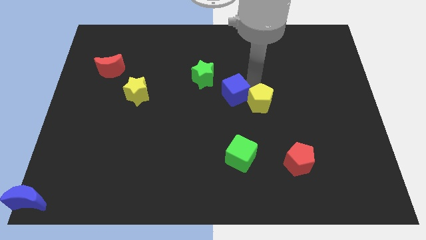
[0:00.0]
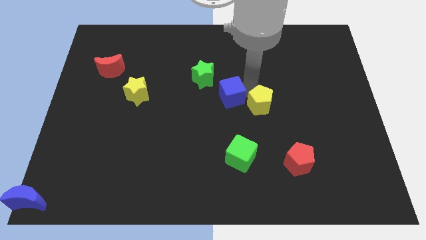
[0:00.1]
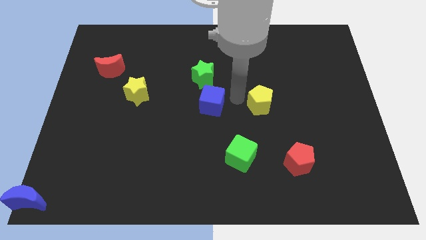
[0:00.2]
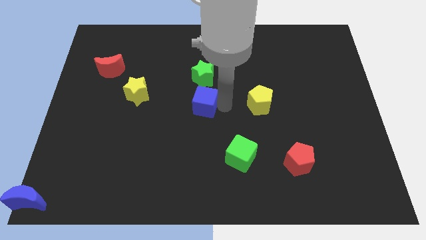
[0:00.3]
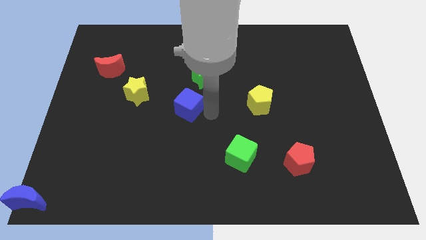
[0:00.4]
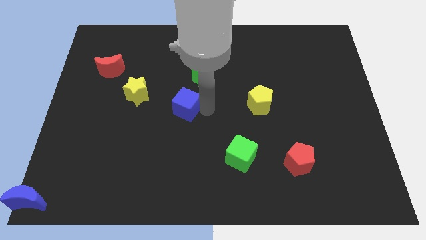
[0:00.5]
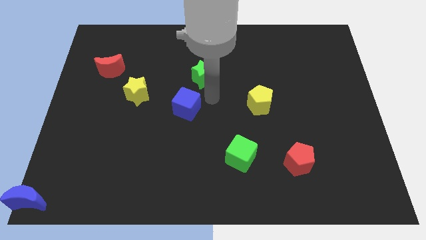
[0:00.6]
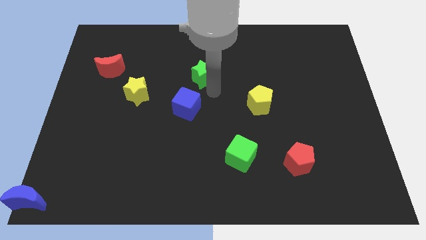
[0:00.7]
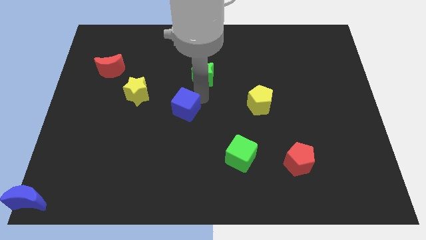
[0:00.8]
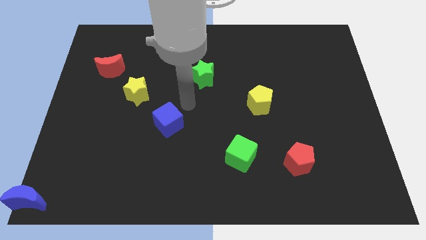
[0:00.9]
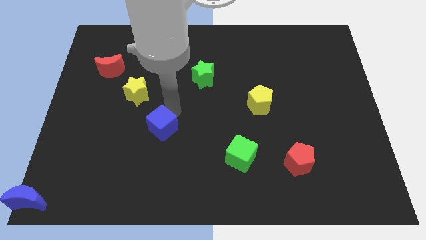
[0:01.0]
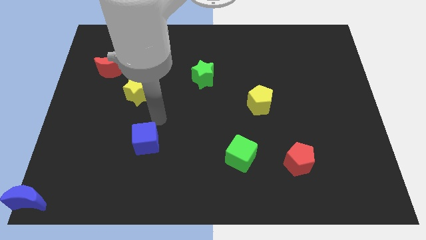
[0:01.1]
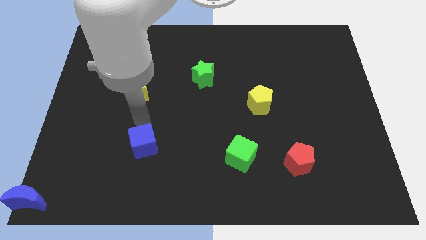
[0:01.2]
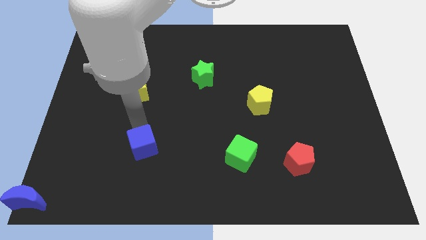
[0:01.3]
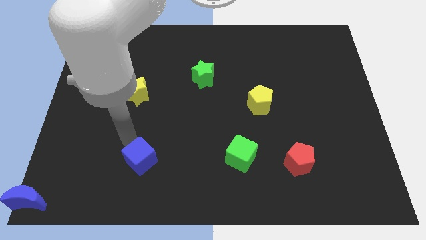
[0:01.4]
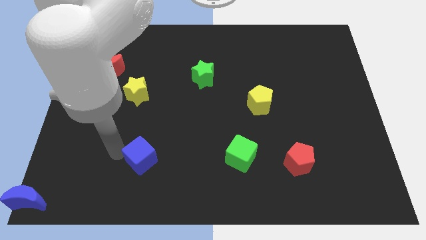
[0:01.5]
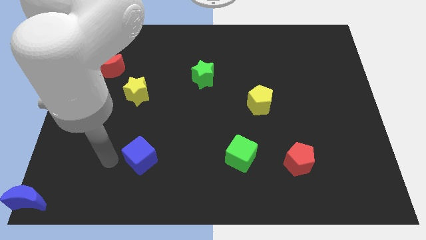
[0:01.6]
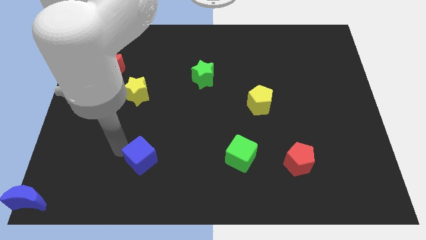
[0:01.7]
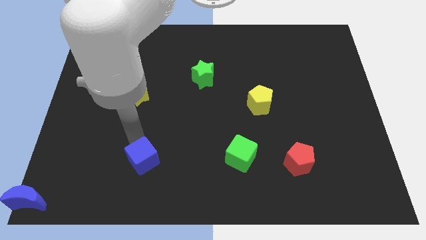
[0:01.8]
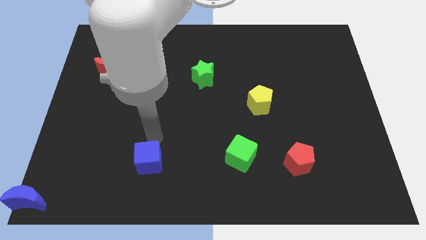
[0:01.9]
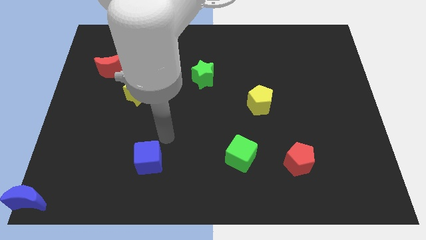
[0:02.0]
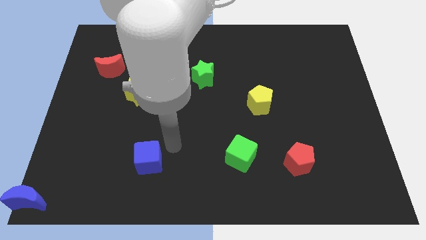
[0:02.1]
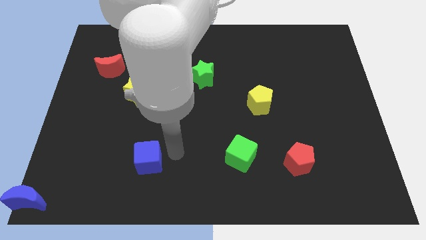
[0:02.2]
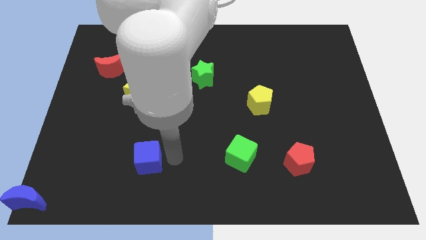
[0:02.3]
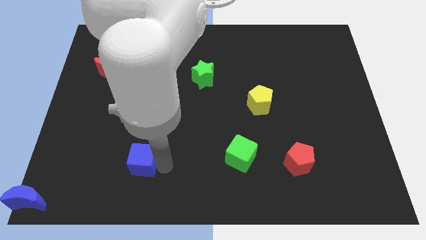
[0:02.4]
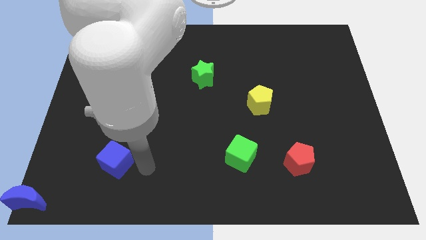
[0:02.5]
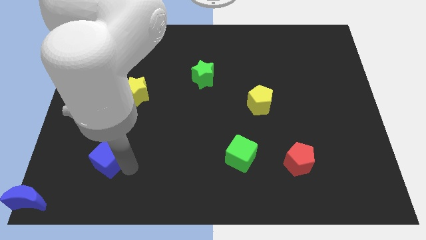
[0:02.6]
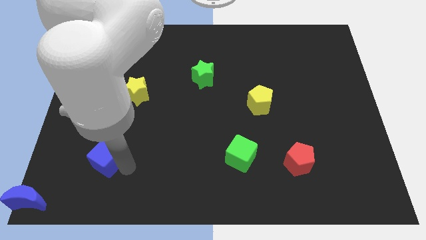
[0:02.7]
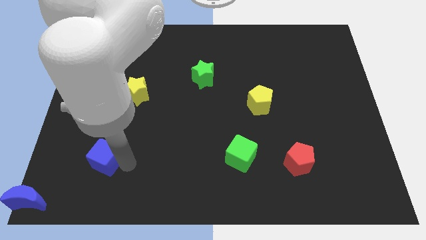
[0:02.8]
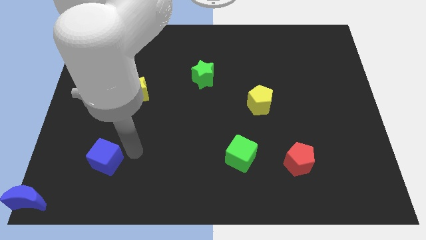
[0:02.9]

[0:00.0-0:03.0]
move the blue cube towards the bottom left

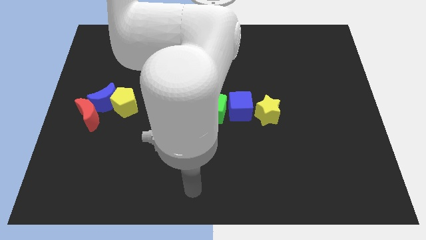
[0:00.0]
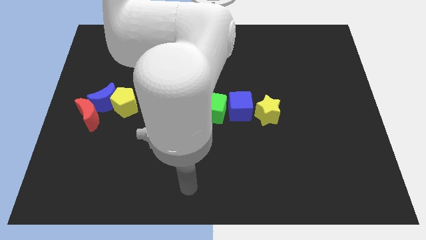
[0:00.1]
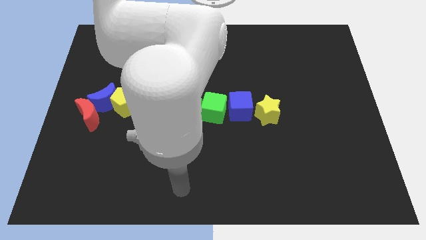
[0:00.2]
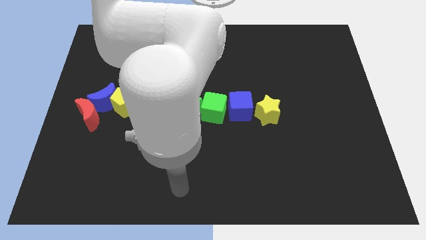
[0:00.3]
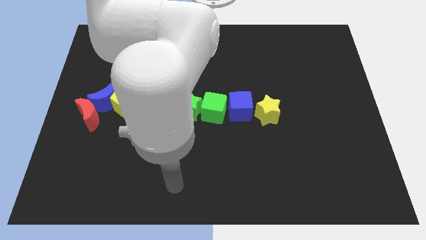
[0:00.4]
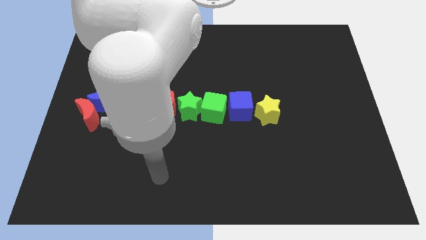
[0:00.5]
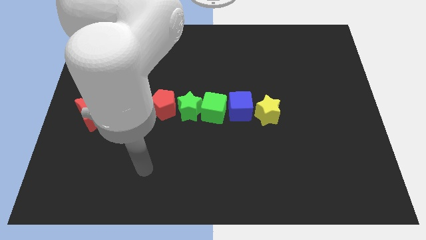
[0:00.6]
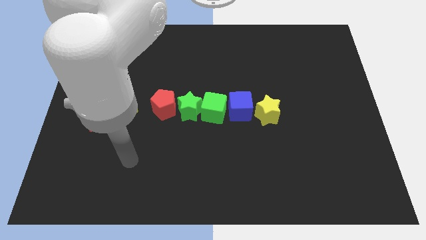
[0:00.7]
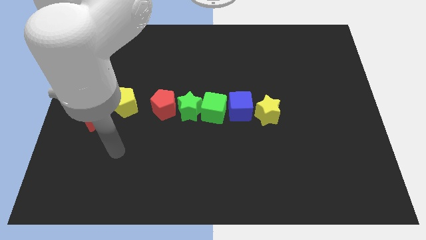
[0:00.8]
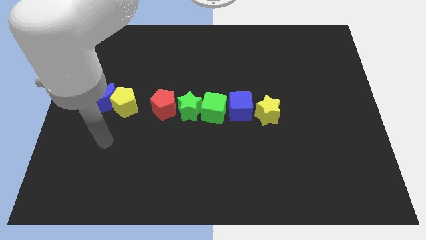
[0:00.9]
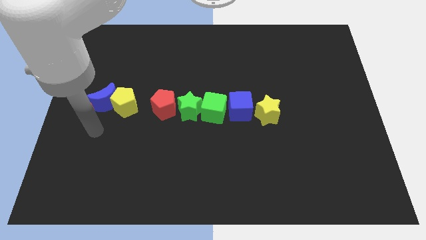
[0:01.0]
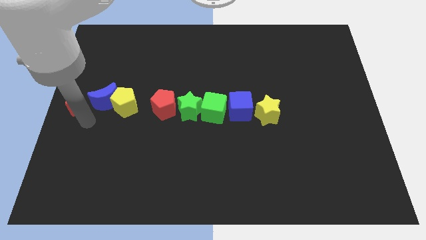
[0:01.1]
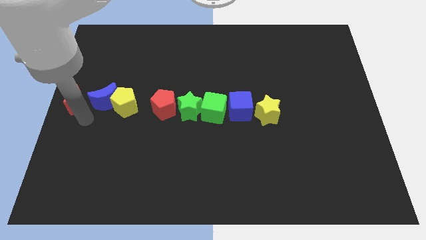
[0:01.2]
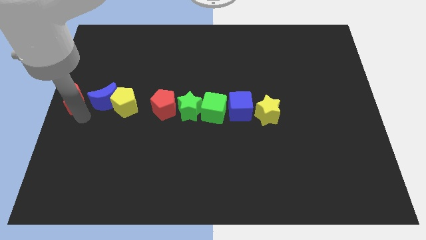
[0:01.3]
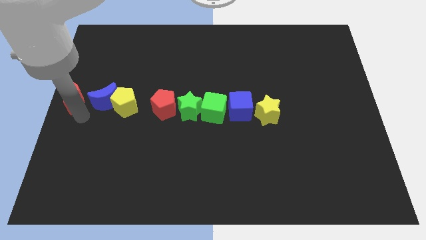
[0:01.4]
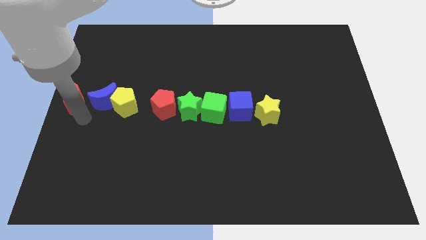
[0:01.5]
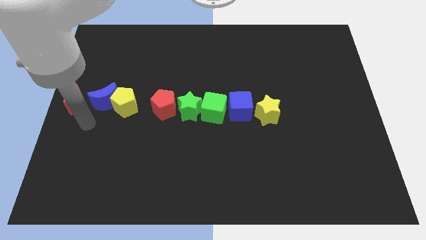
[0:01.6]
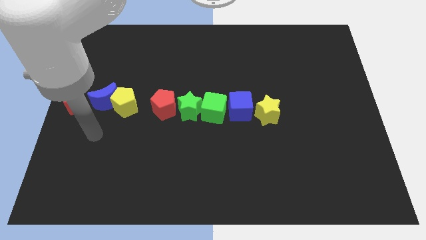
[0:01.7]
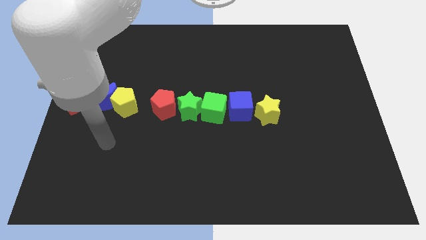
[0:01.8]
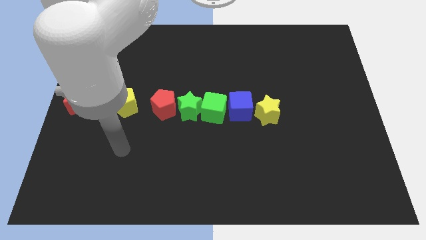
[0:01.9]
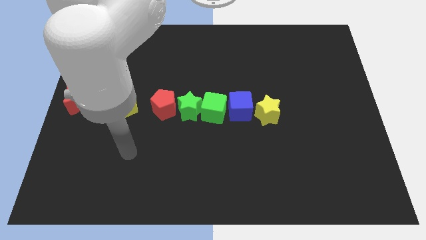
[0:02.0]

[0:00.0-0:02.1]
push the red crescent to the left of the blue crescent

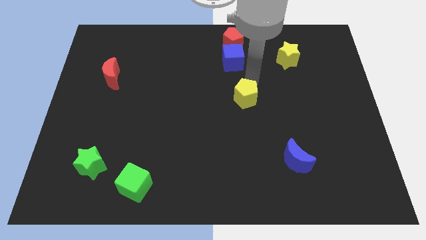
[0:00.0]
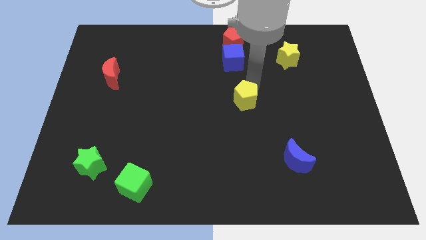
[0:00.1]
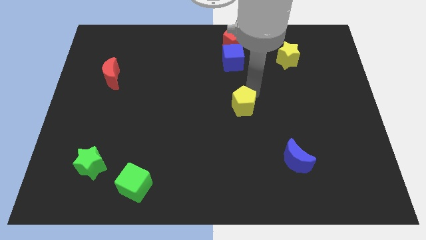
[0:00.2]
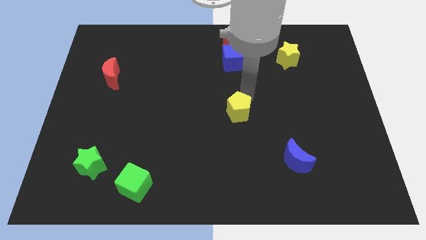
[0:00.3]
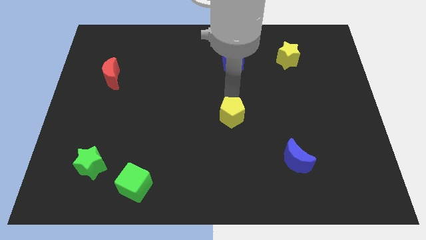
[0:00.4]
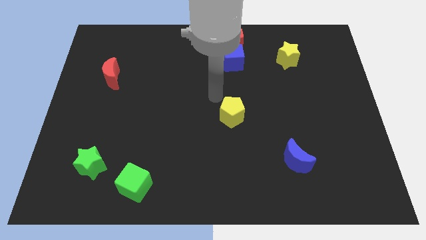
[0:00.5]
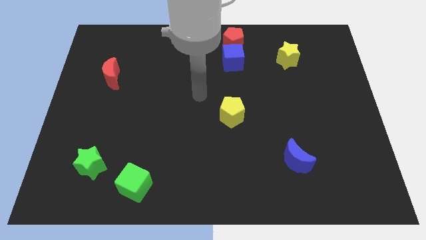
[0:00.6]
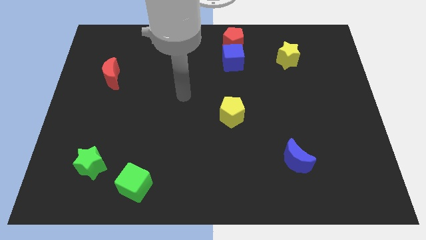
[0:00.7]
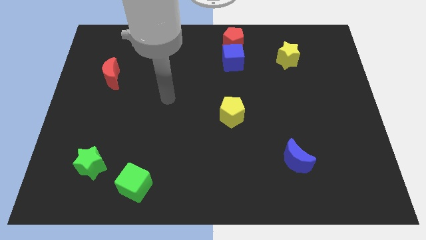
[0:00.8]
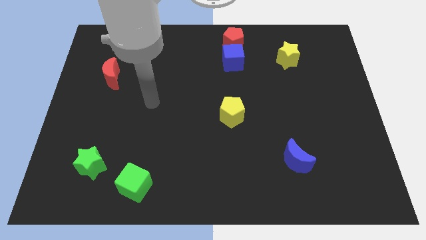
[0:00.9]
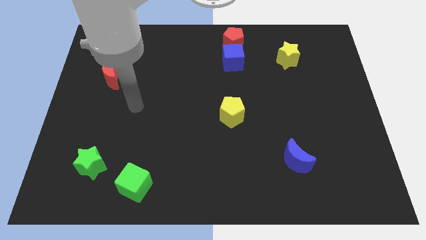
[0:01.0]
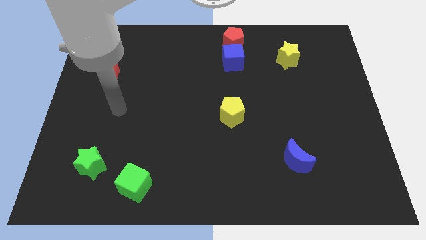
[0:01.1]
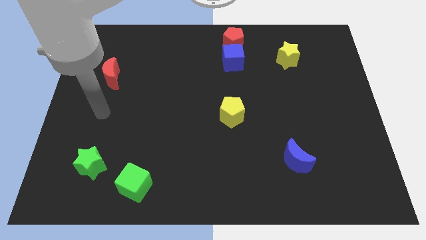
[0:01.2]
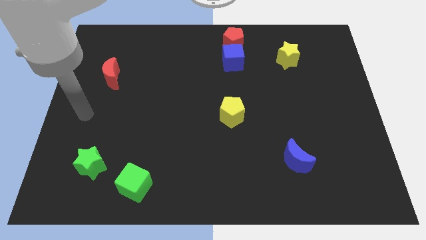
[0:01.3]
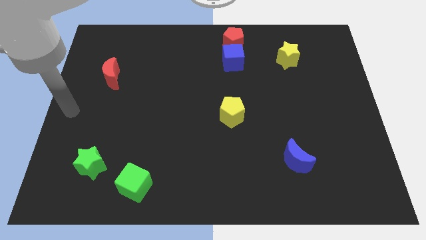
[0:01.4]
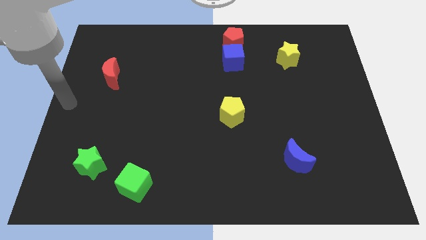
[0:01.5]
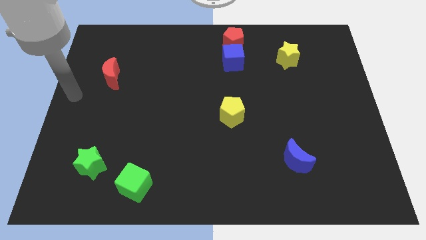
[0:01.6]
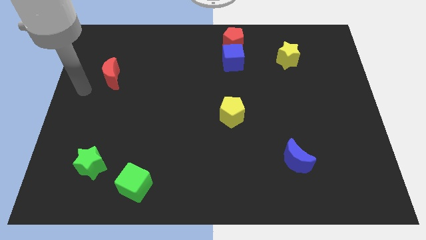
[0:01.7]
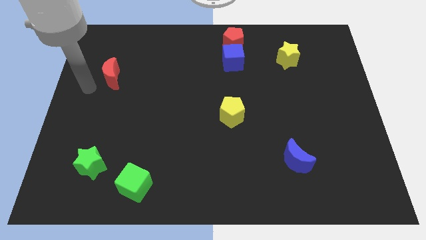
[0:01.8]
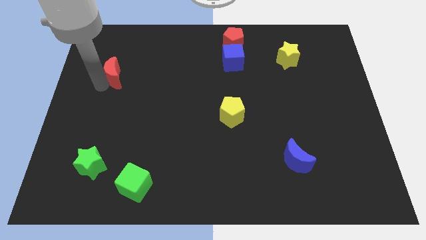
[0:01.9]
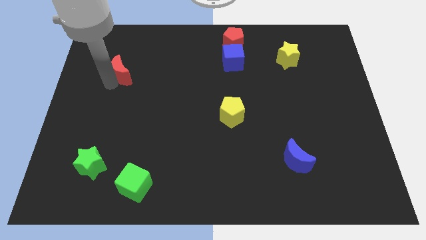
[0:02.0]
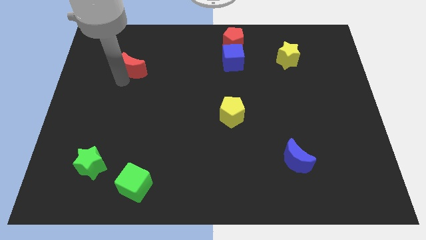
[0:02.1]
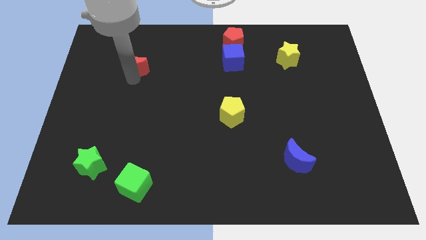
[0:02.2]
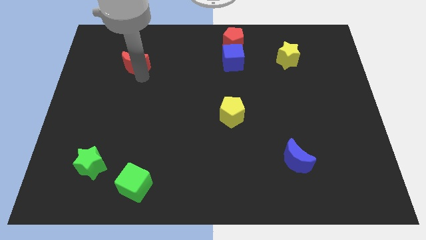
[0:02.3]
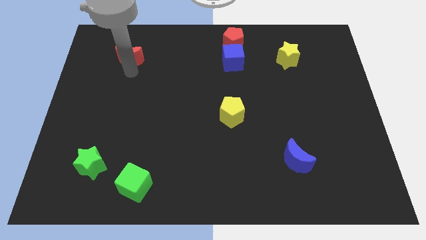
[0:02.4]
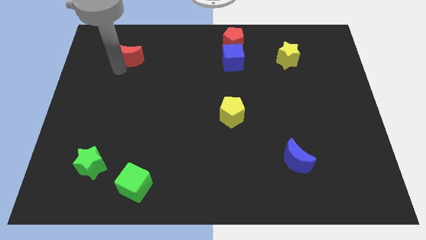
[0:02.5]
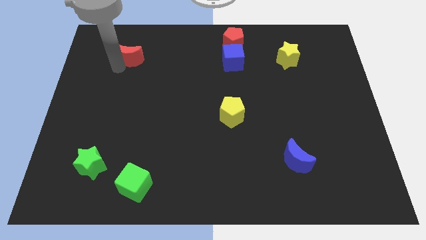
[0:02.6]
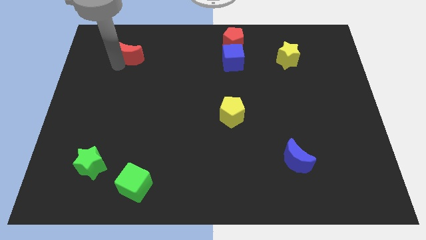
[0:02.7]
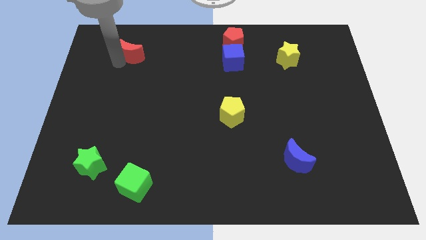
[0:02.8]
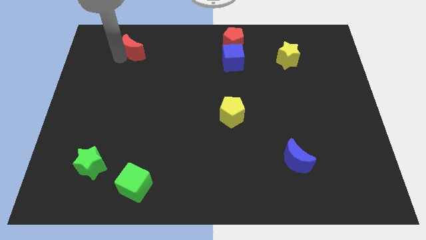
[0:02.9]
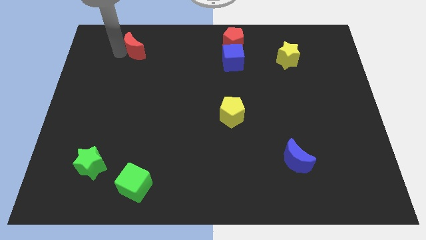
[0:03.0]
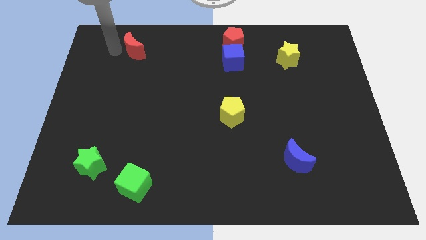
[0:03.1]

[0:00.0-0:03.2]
push red crescent upwards

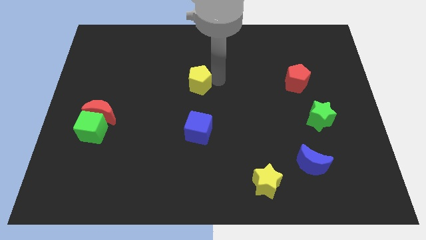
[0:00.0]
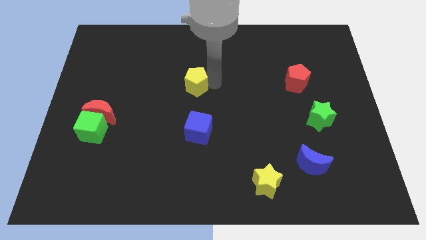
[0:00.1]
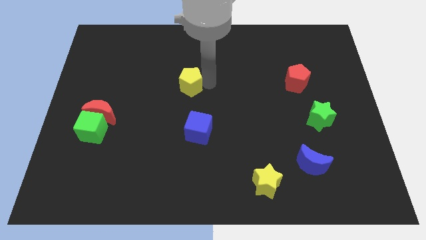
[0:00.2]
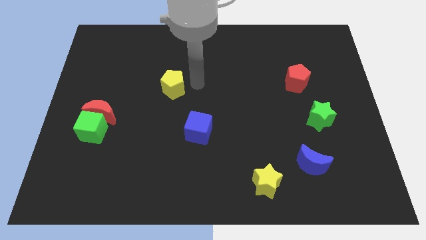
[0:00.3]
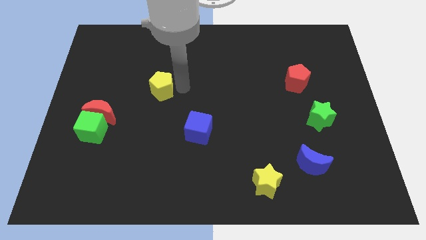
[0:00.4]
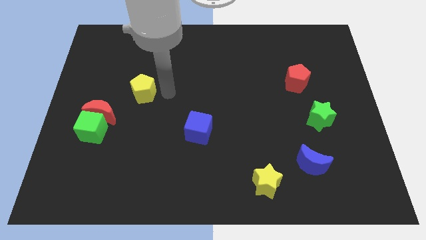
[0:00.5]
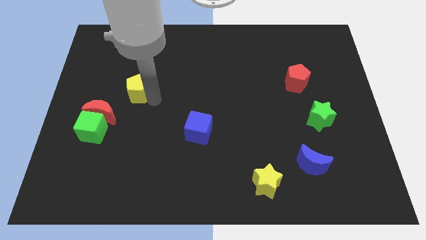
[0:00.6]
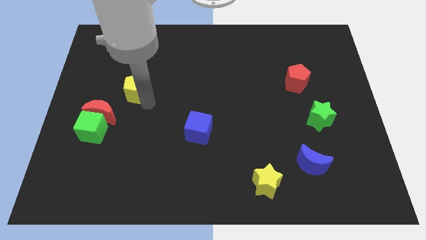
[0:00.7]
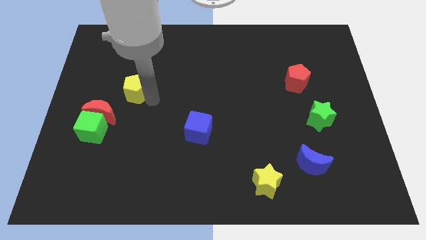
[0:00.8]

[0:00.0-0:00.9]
push the yellow pentagon to the left
